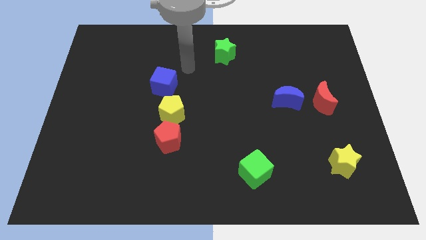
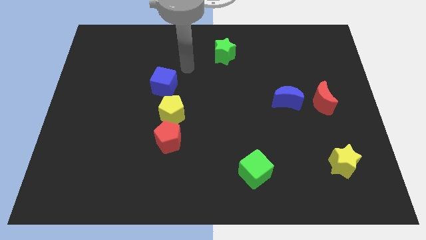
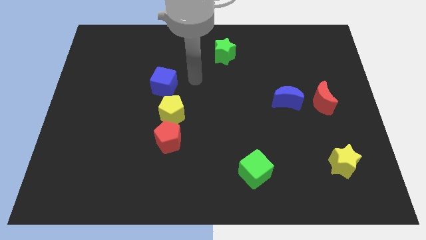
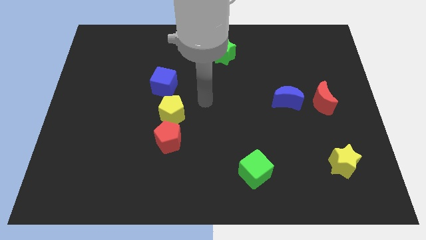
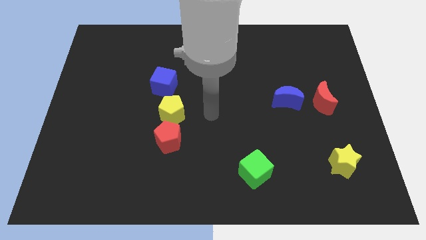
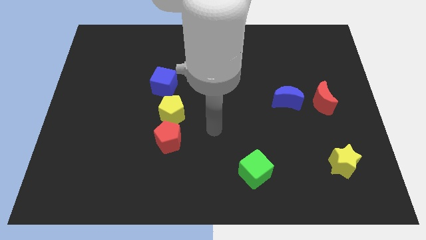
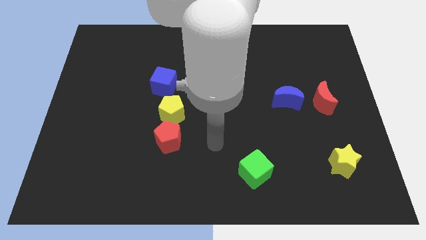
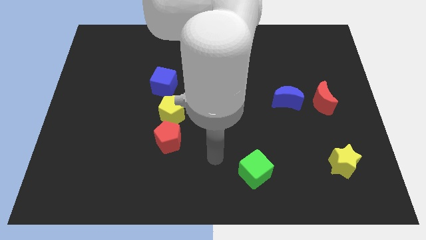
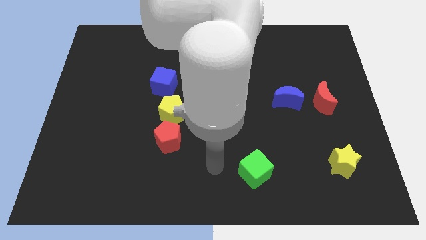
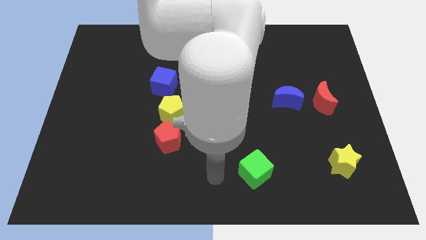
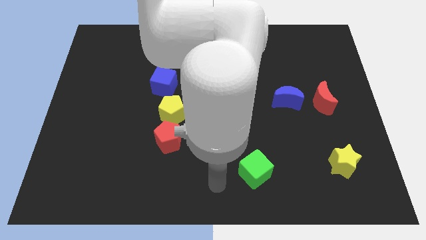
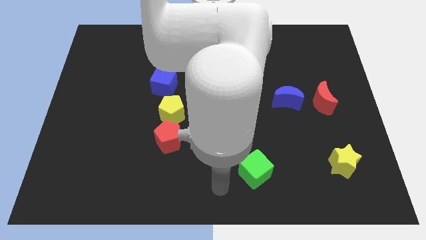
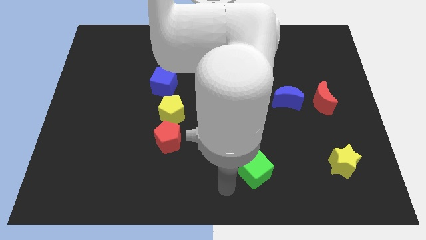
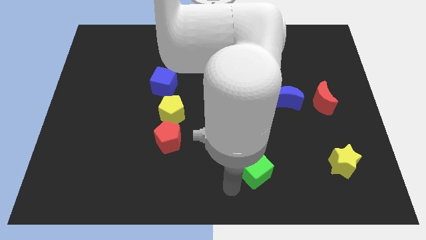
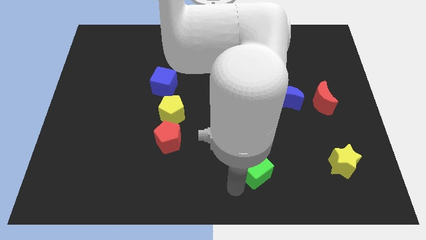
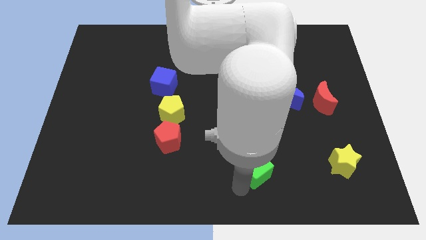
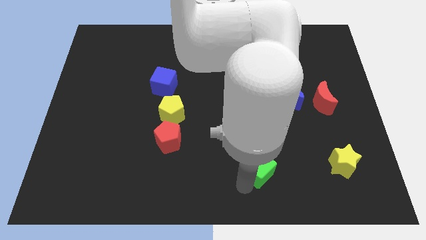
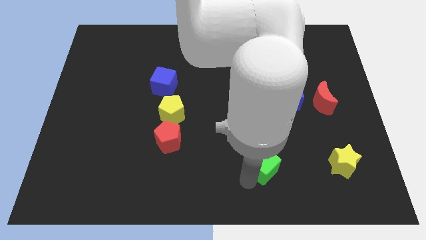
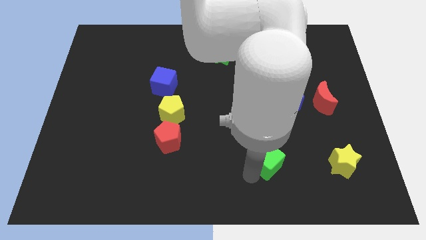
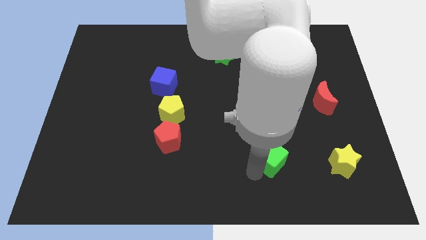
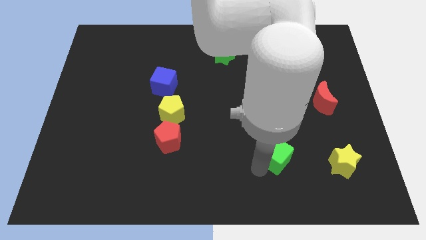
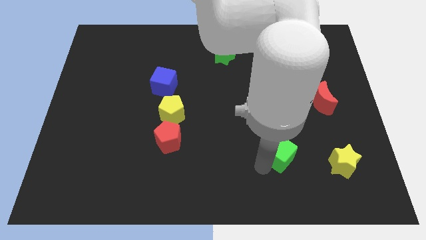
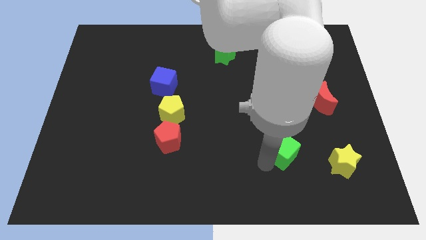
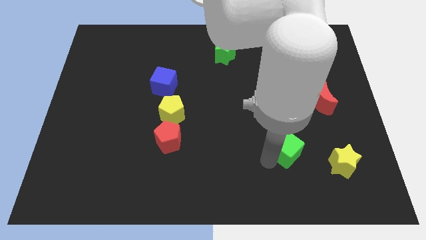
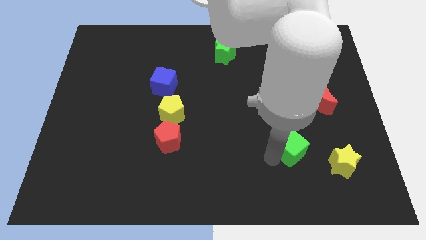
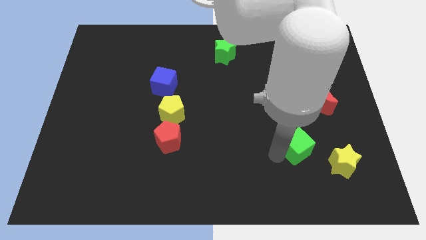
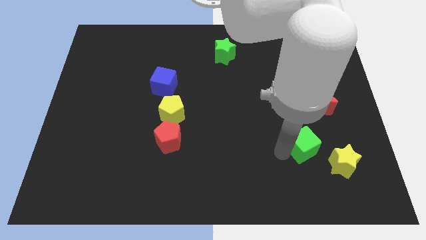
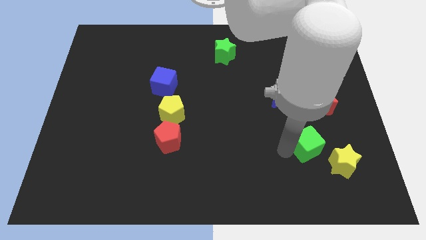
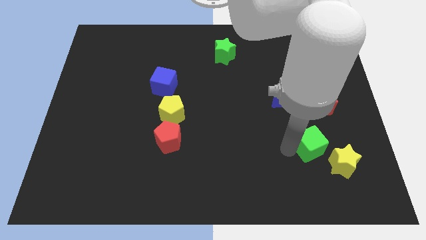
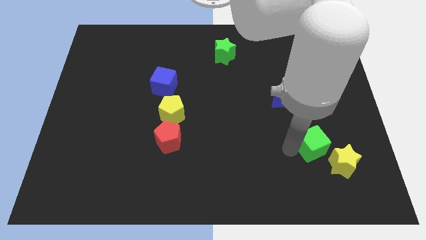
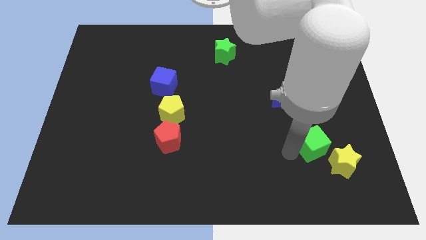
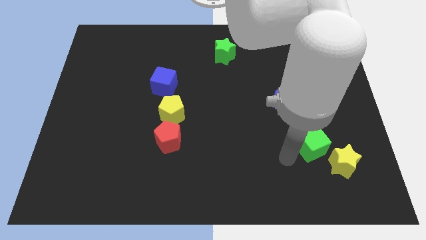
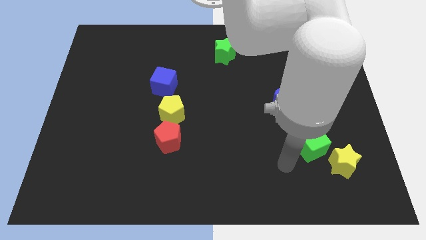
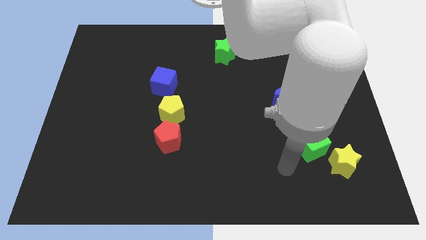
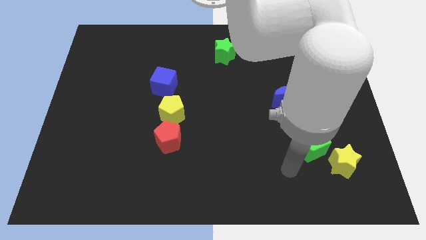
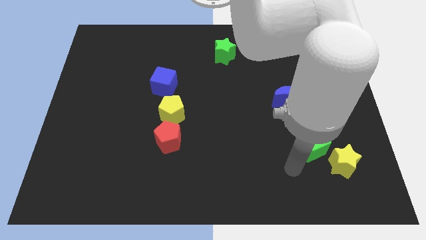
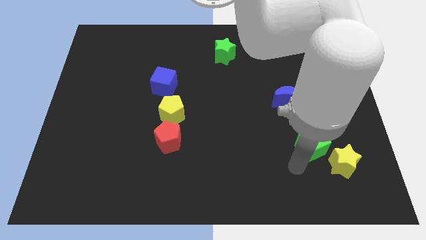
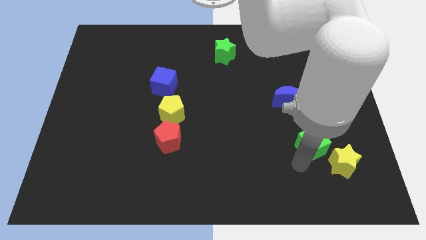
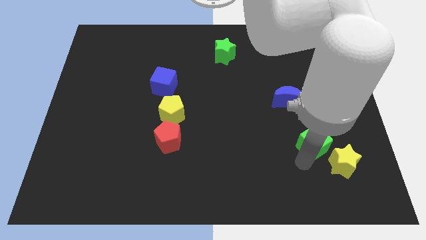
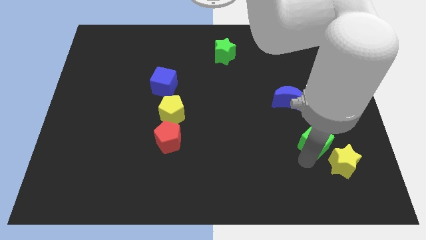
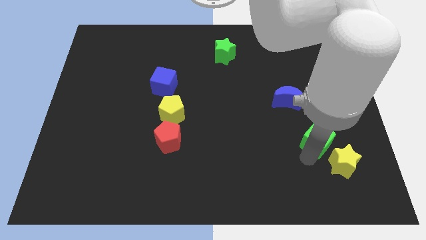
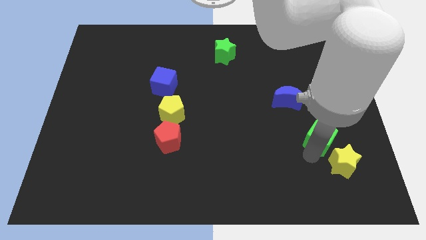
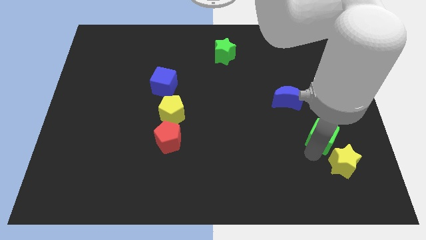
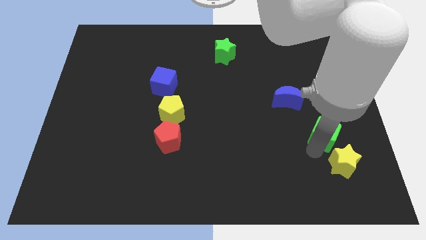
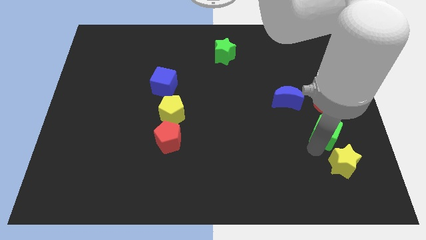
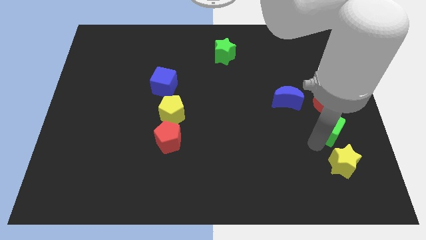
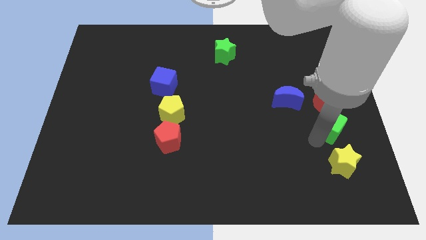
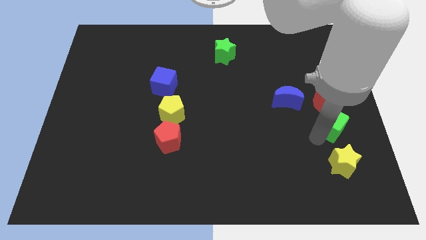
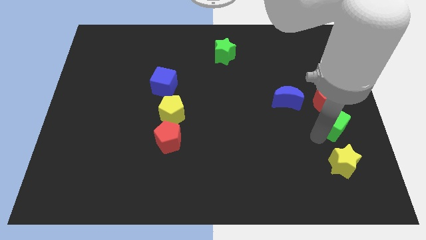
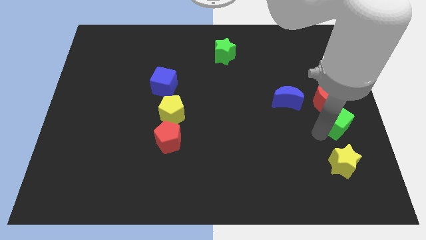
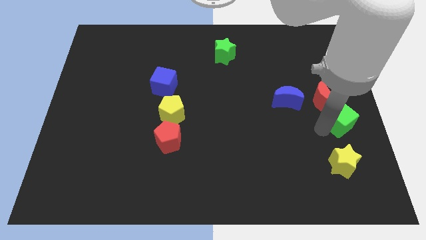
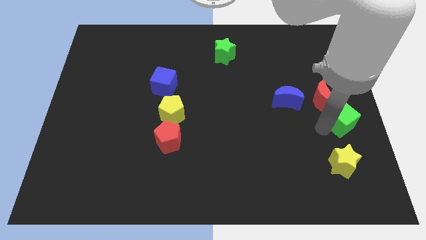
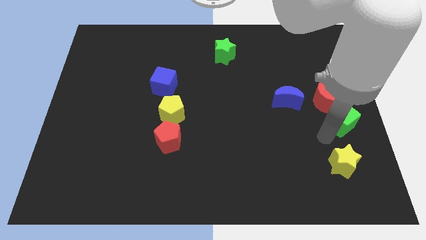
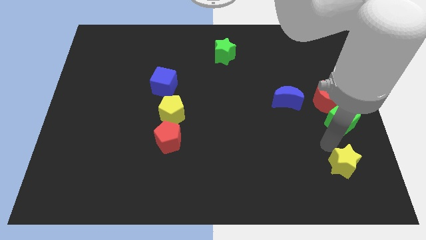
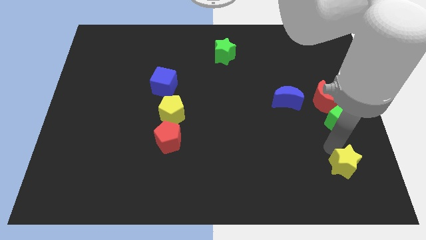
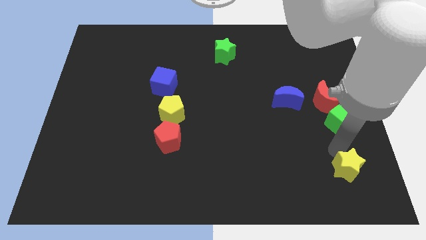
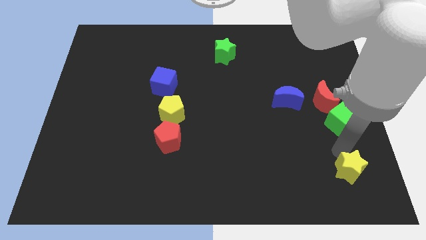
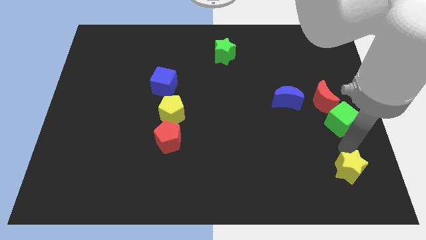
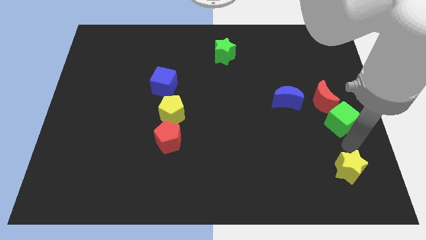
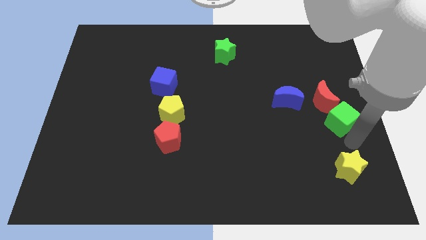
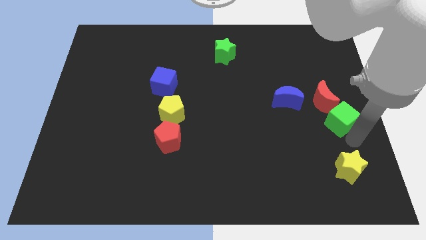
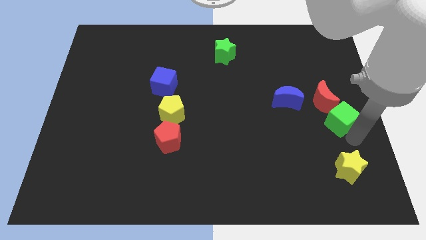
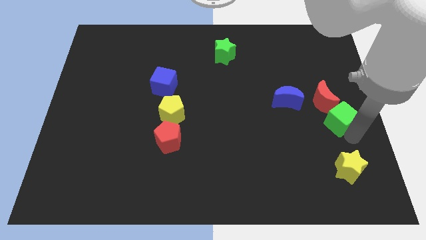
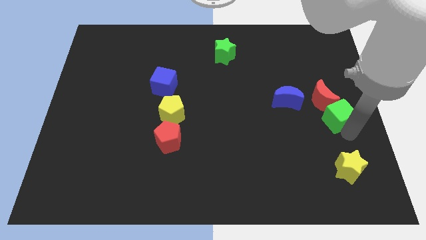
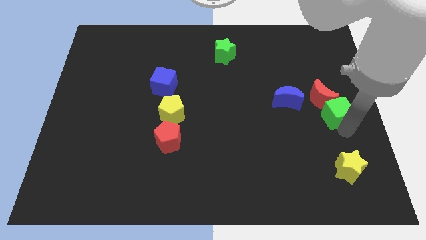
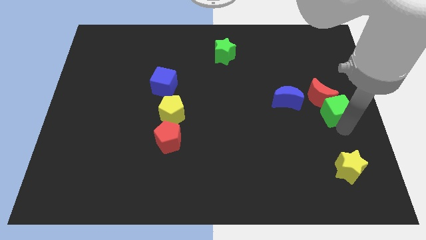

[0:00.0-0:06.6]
put the green cube to the red moon

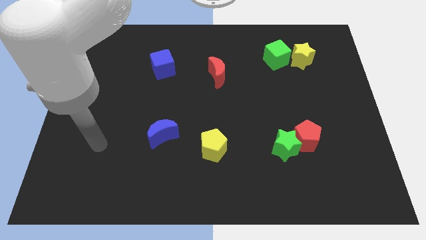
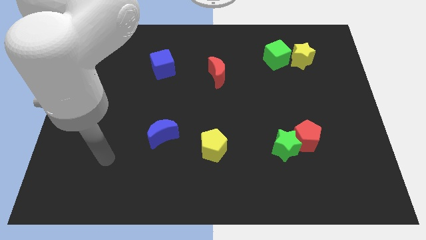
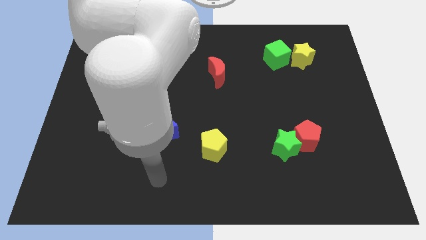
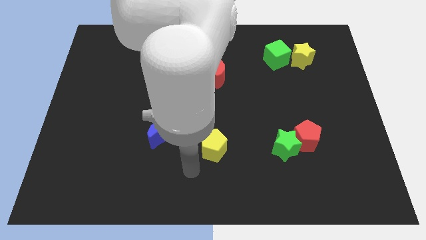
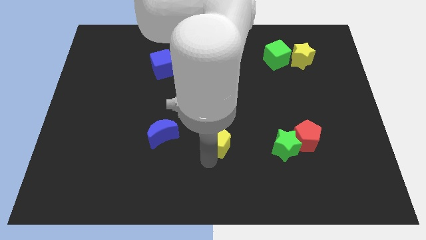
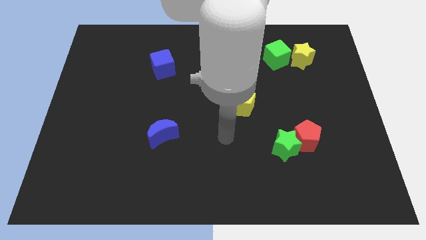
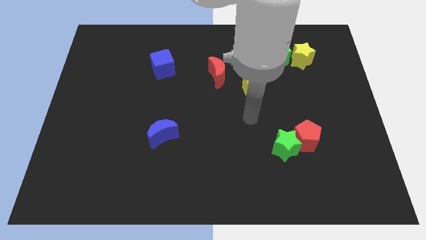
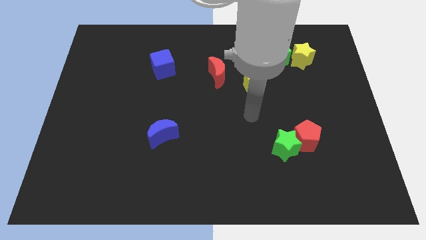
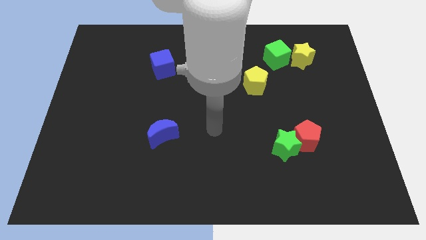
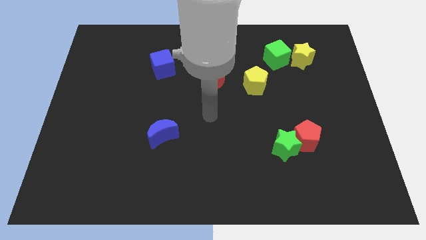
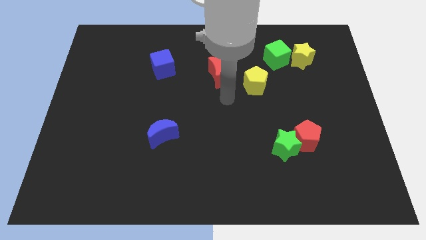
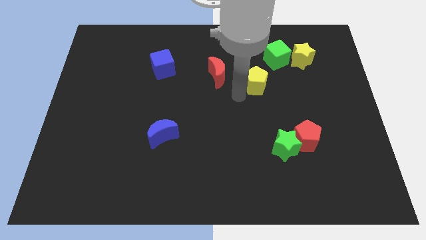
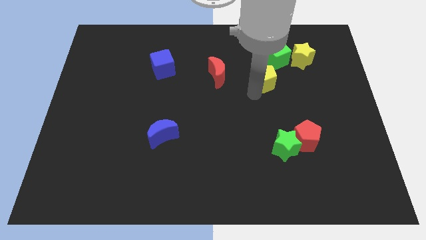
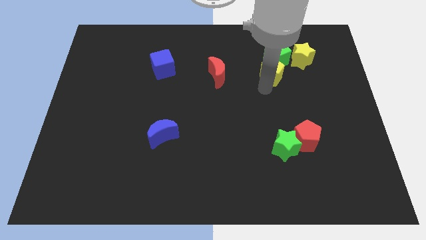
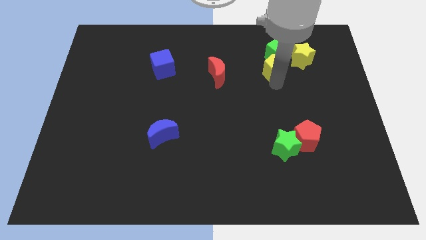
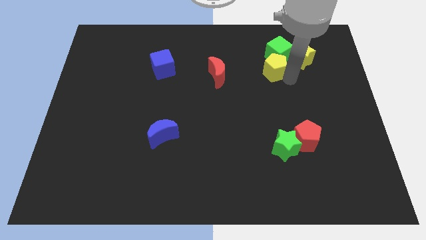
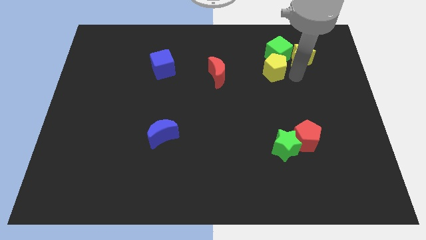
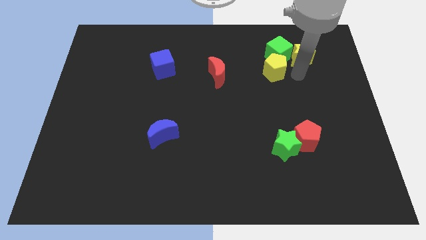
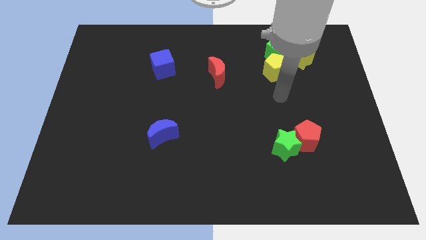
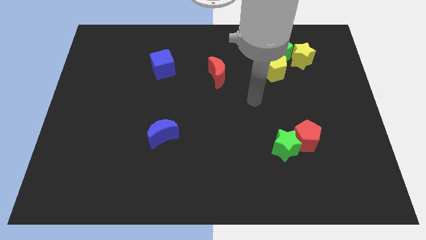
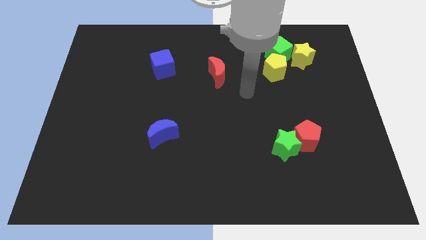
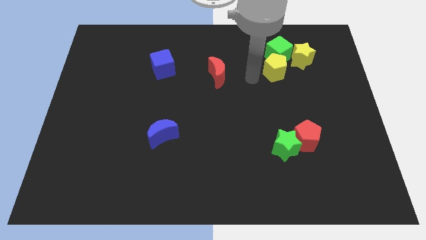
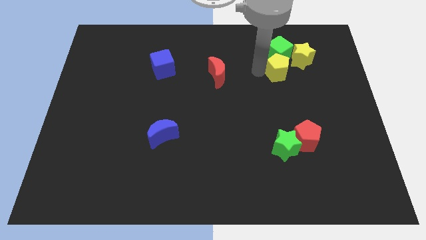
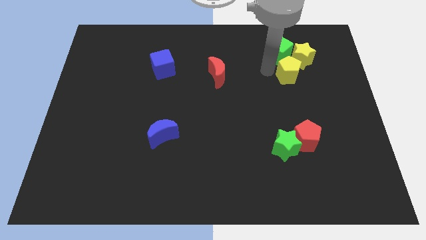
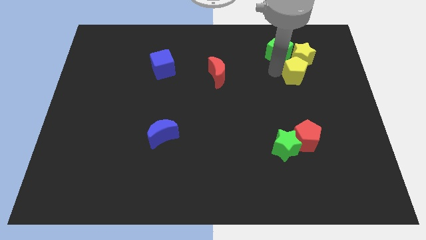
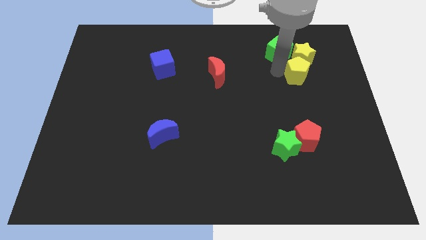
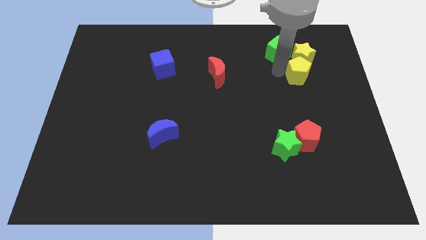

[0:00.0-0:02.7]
put the yellow pentagon close to the yellow star
